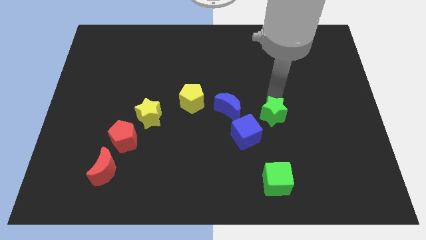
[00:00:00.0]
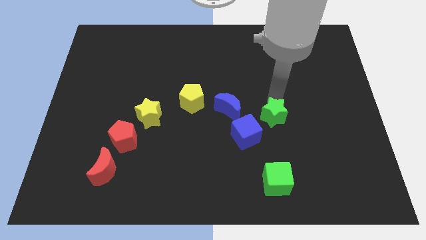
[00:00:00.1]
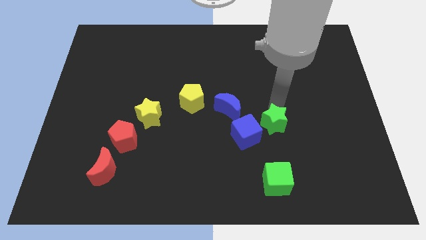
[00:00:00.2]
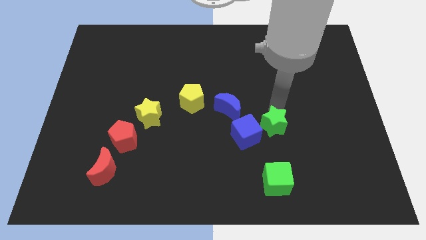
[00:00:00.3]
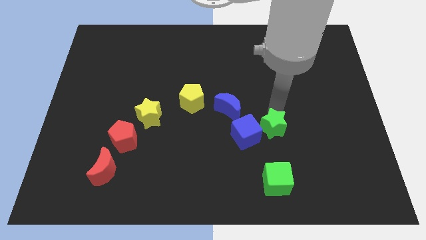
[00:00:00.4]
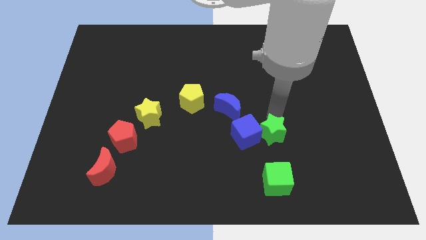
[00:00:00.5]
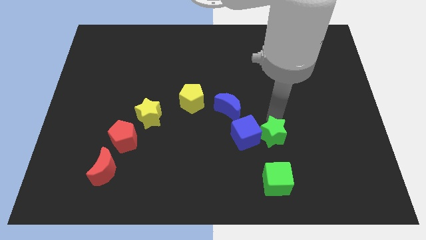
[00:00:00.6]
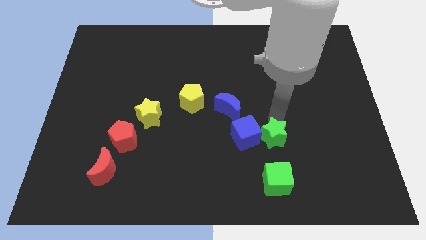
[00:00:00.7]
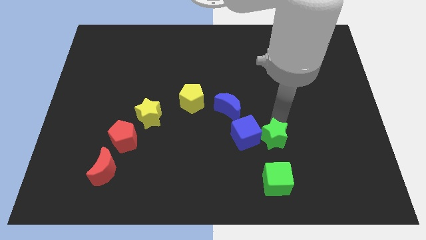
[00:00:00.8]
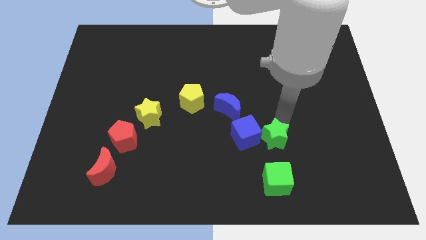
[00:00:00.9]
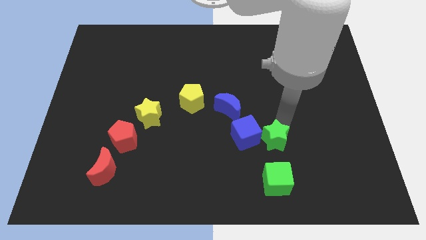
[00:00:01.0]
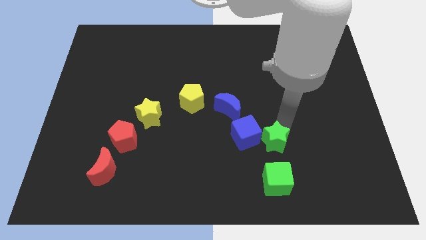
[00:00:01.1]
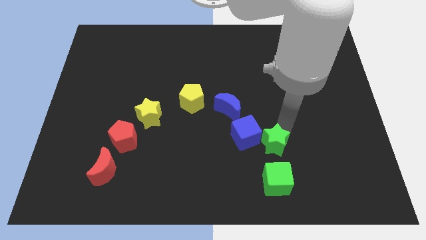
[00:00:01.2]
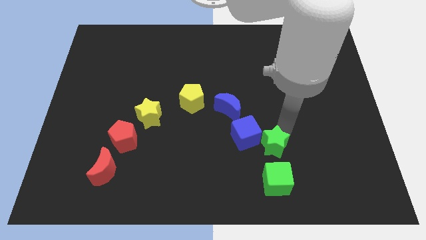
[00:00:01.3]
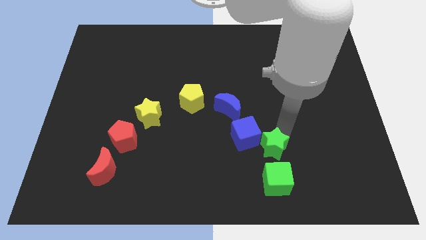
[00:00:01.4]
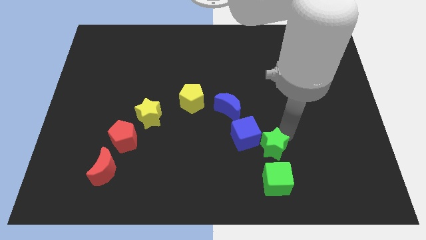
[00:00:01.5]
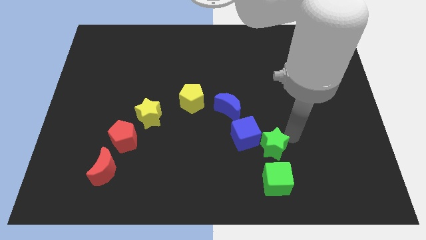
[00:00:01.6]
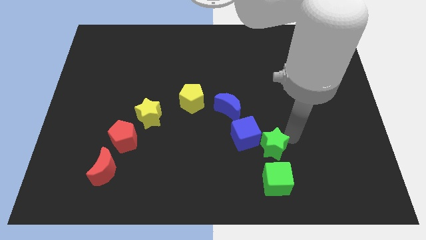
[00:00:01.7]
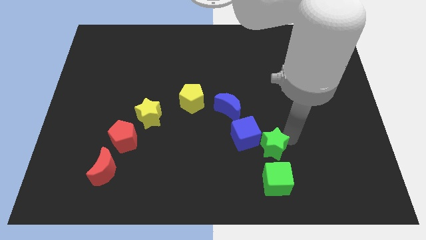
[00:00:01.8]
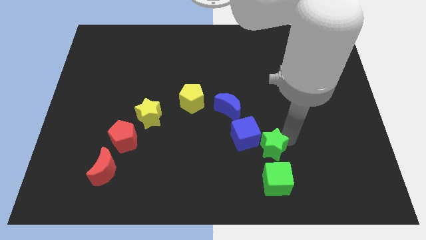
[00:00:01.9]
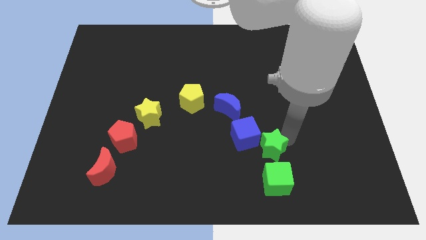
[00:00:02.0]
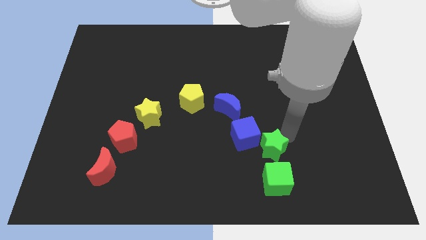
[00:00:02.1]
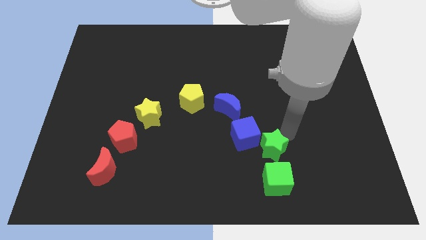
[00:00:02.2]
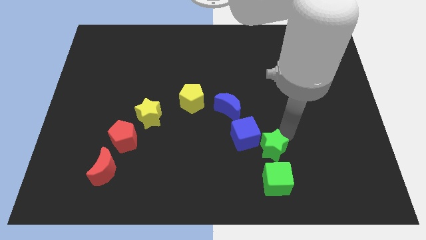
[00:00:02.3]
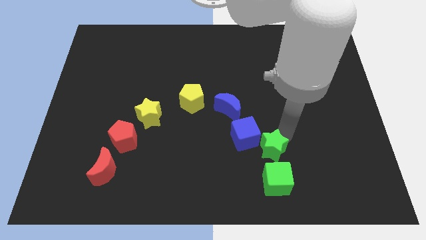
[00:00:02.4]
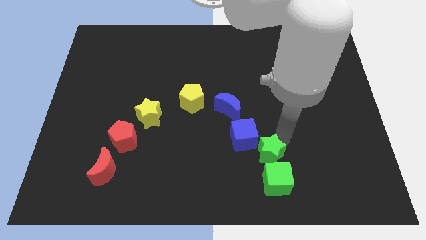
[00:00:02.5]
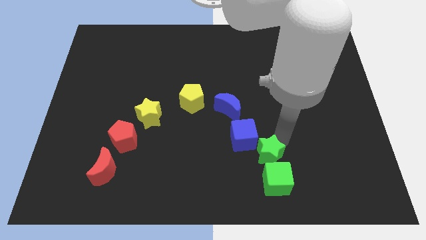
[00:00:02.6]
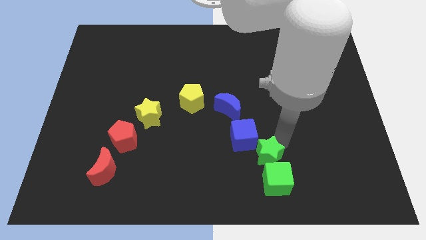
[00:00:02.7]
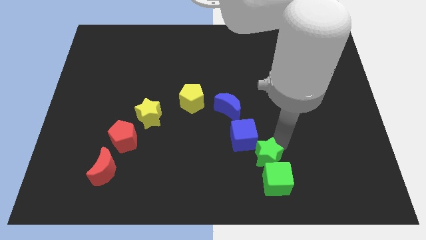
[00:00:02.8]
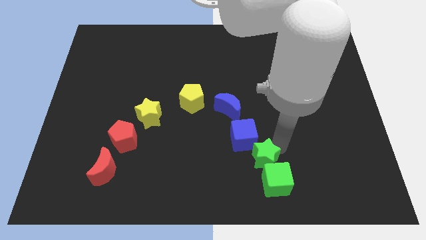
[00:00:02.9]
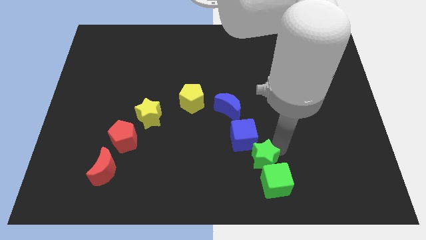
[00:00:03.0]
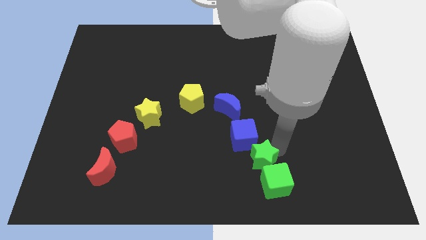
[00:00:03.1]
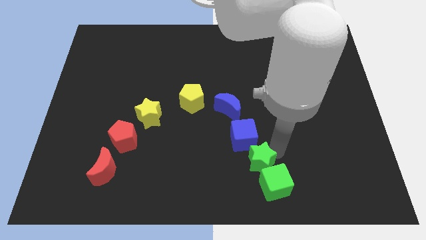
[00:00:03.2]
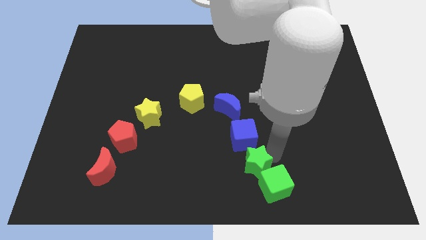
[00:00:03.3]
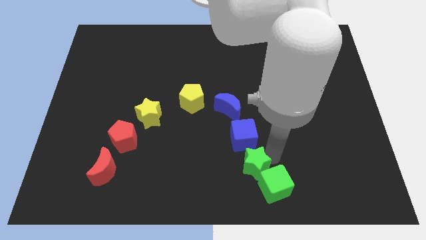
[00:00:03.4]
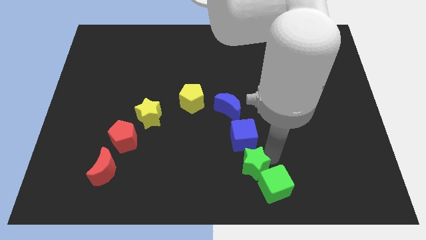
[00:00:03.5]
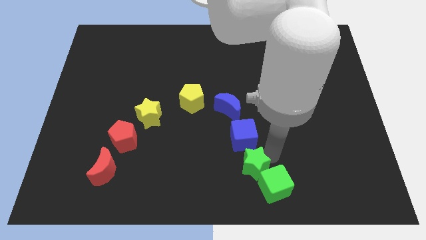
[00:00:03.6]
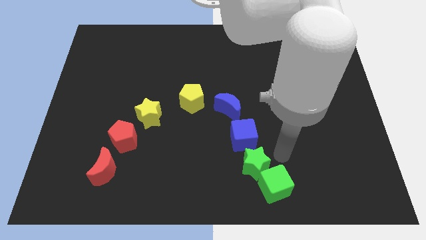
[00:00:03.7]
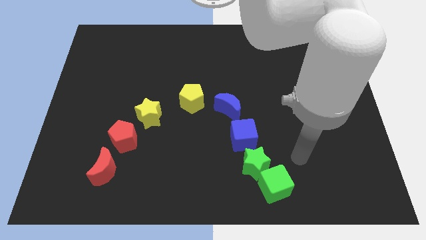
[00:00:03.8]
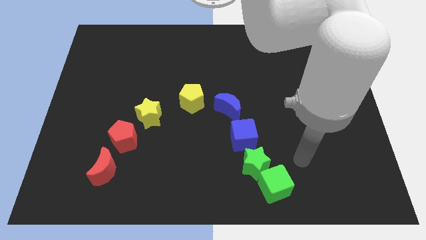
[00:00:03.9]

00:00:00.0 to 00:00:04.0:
drag the green star to the top of green cube

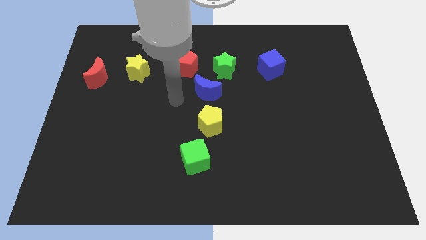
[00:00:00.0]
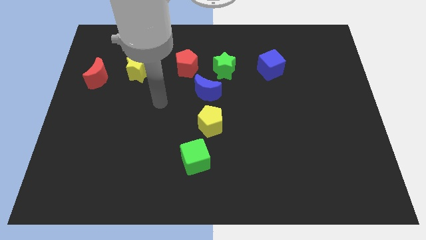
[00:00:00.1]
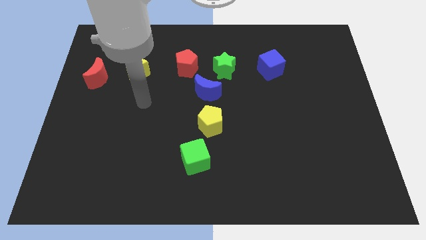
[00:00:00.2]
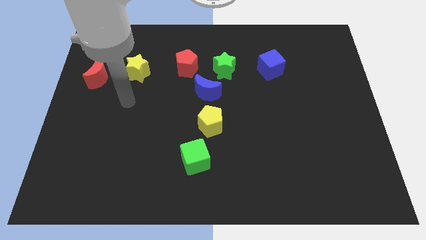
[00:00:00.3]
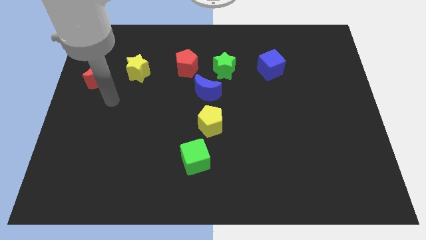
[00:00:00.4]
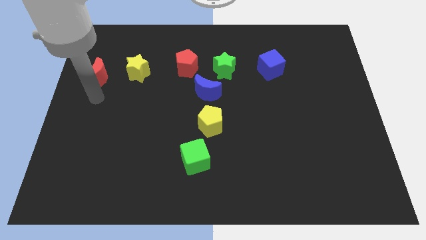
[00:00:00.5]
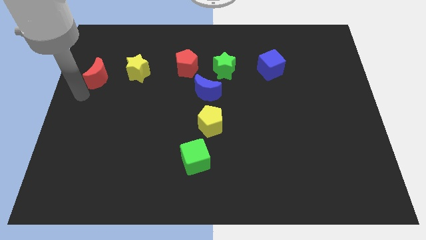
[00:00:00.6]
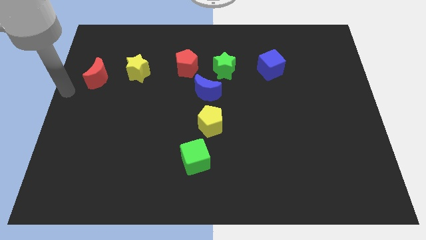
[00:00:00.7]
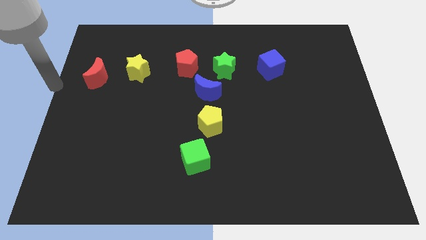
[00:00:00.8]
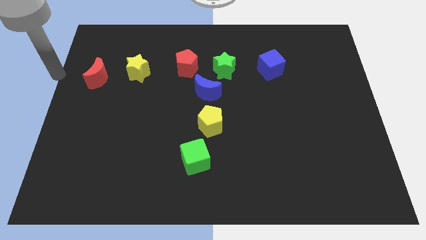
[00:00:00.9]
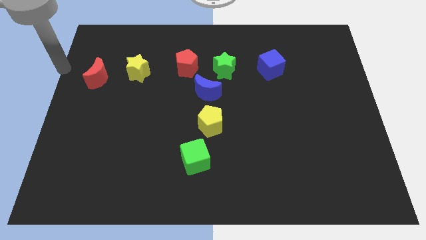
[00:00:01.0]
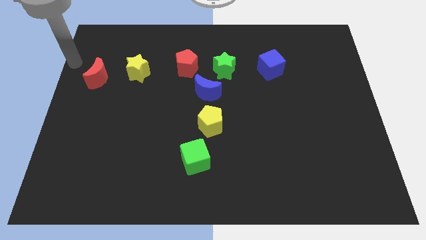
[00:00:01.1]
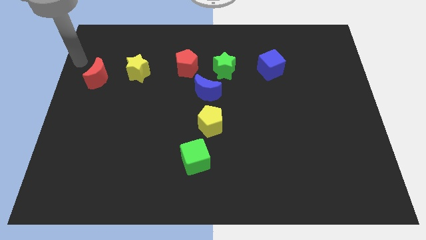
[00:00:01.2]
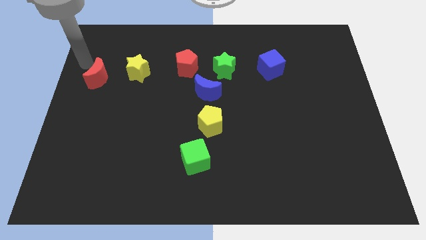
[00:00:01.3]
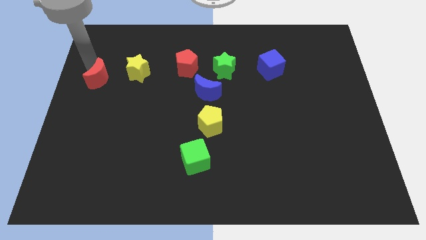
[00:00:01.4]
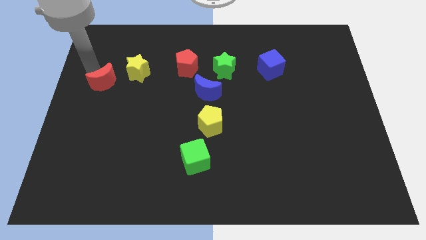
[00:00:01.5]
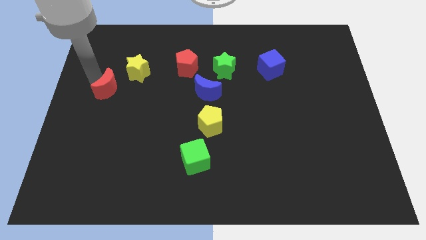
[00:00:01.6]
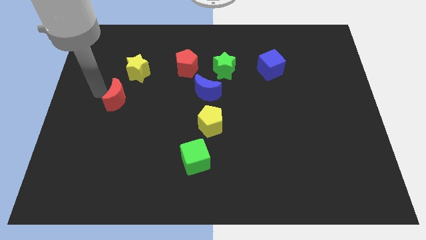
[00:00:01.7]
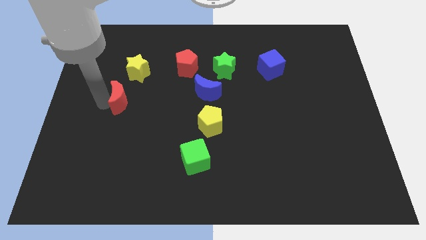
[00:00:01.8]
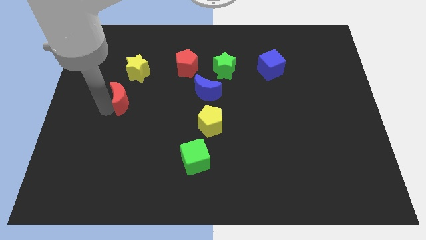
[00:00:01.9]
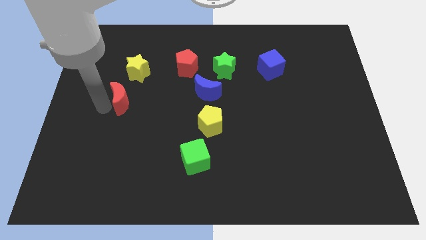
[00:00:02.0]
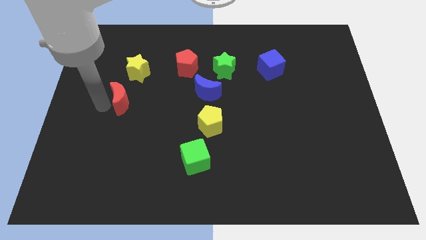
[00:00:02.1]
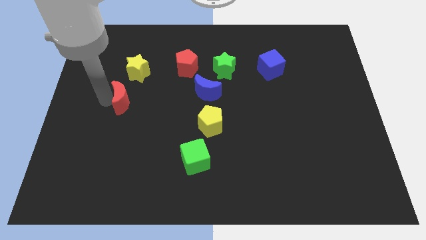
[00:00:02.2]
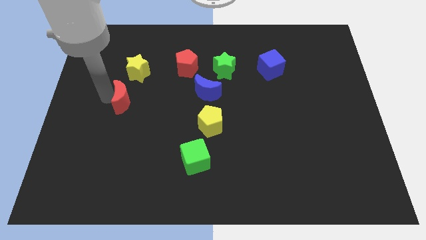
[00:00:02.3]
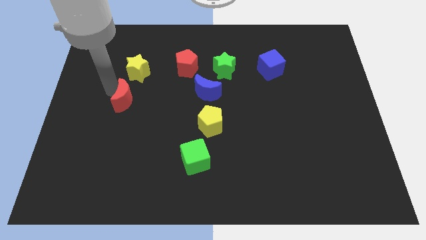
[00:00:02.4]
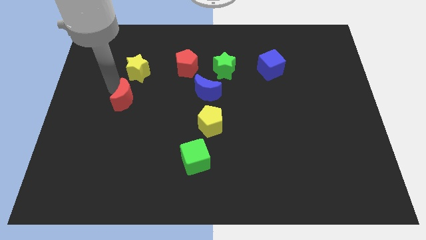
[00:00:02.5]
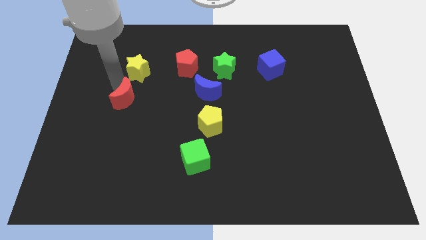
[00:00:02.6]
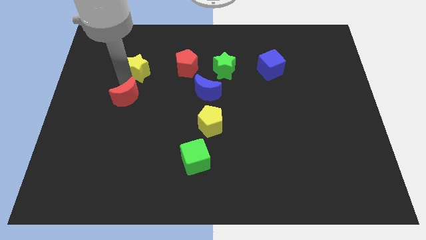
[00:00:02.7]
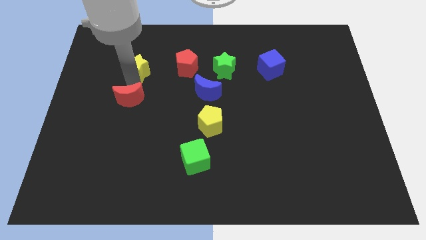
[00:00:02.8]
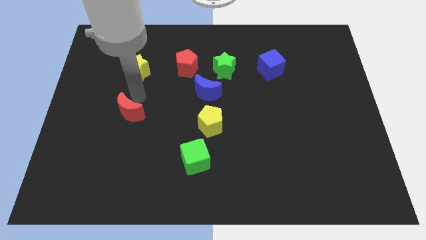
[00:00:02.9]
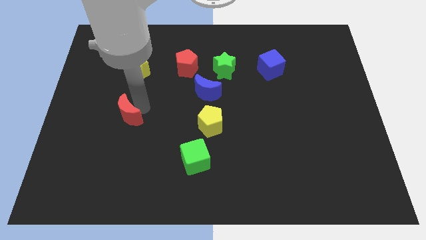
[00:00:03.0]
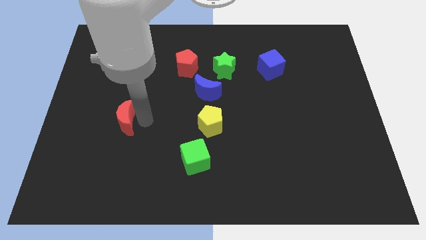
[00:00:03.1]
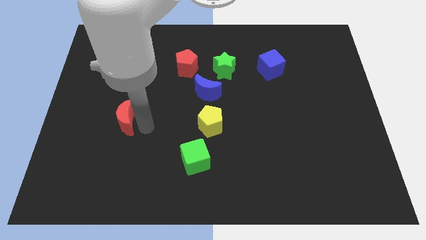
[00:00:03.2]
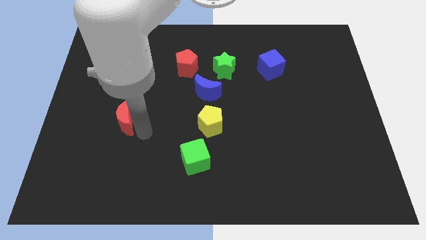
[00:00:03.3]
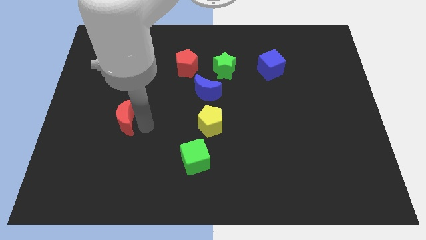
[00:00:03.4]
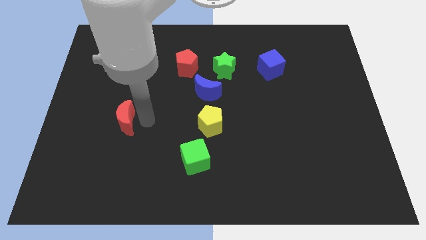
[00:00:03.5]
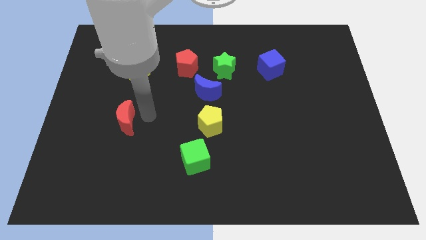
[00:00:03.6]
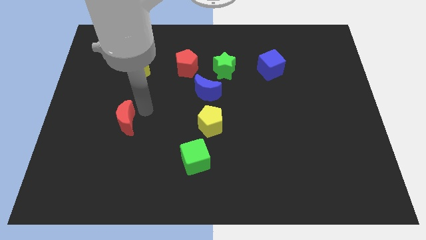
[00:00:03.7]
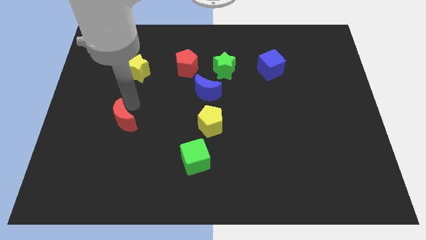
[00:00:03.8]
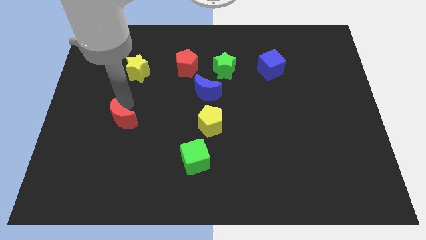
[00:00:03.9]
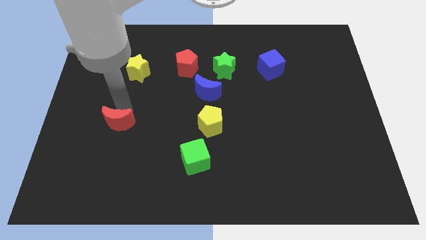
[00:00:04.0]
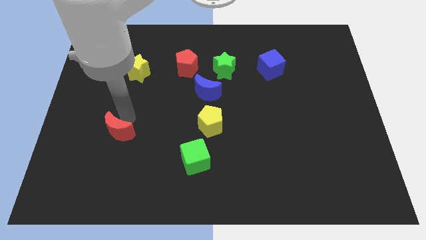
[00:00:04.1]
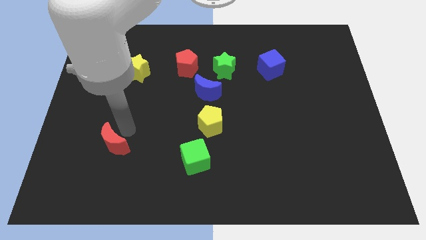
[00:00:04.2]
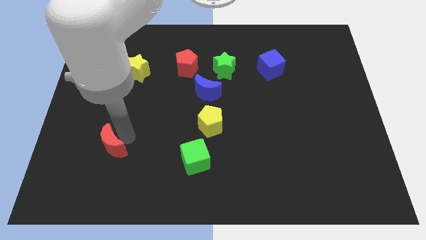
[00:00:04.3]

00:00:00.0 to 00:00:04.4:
move the red crescent to the bottom of the board

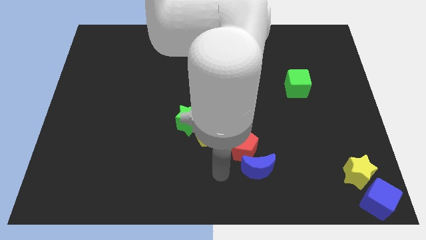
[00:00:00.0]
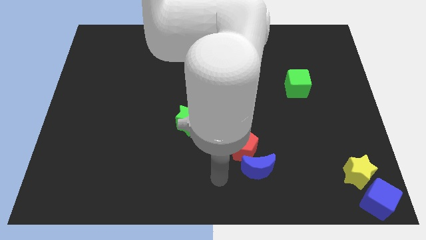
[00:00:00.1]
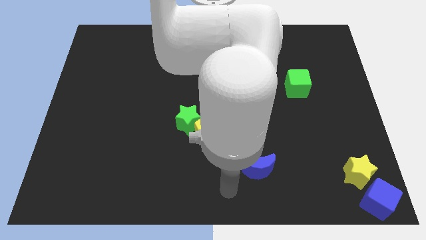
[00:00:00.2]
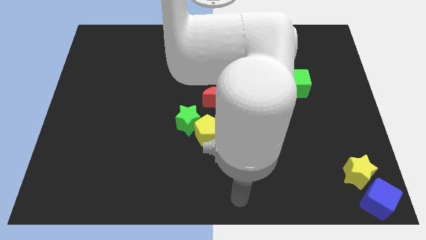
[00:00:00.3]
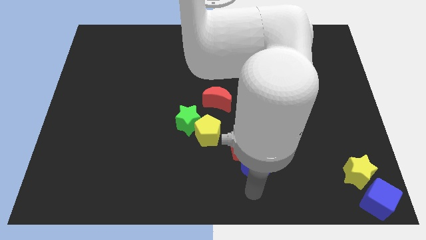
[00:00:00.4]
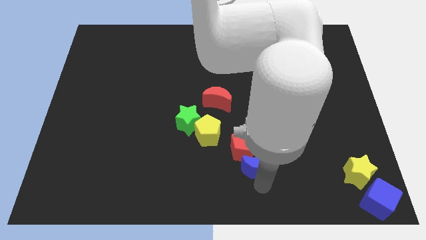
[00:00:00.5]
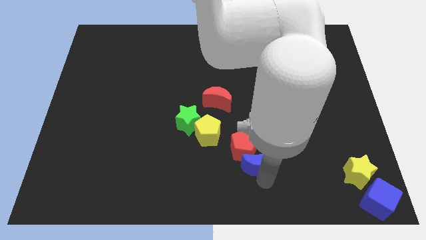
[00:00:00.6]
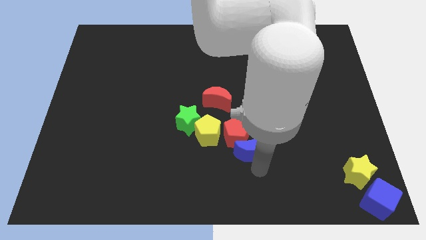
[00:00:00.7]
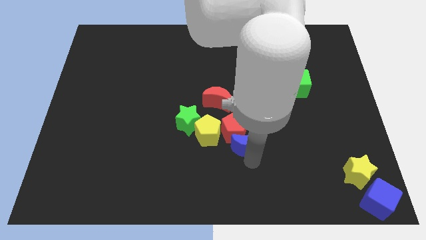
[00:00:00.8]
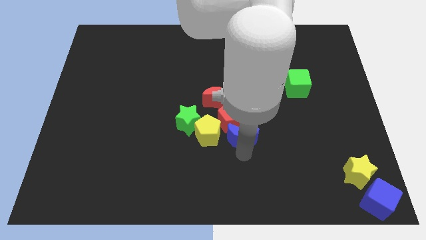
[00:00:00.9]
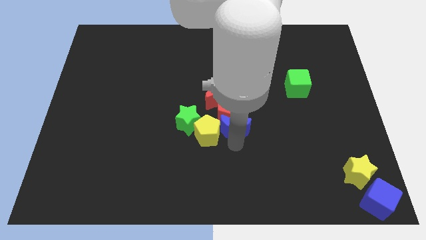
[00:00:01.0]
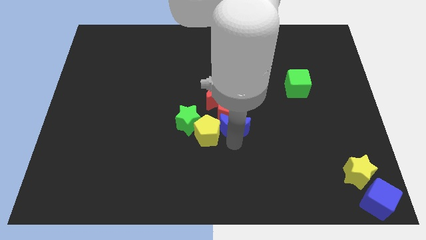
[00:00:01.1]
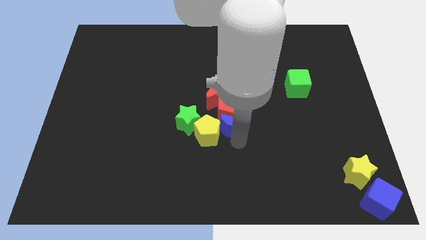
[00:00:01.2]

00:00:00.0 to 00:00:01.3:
push the blue crescent and red pentagon into the red crescent
